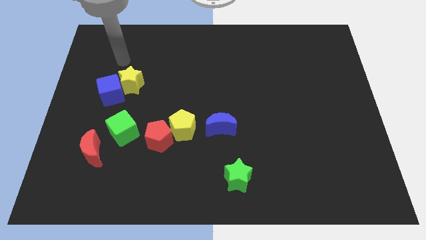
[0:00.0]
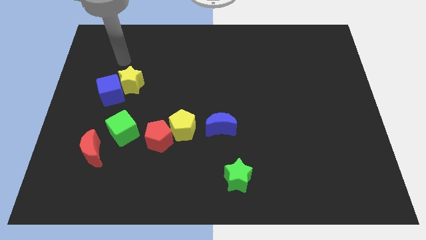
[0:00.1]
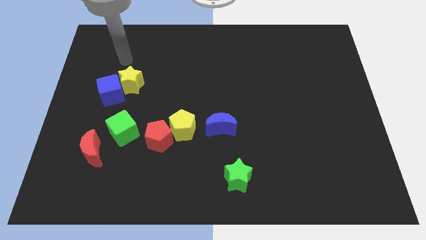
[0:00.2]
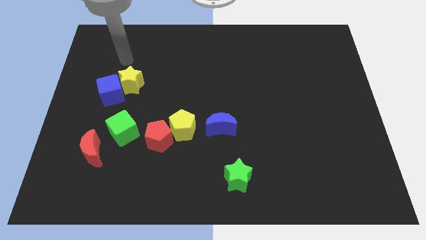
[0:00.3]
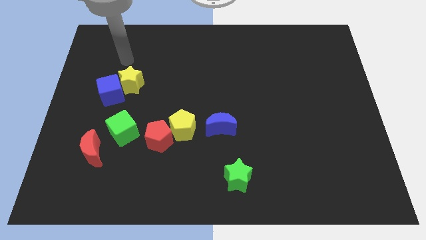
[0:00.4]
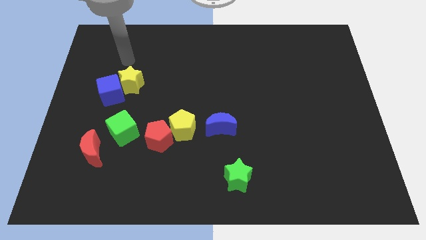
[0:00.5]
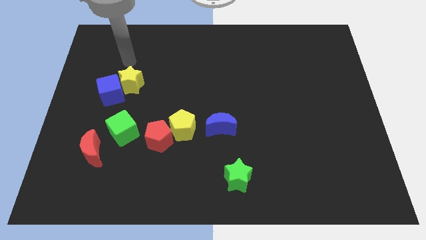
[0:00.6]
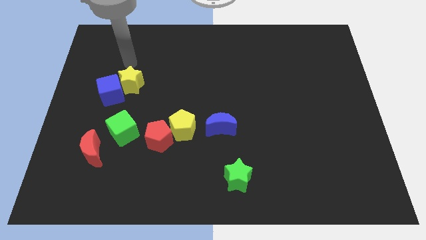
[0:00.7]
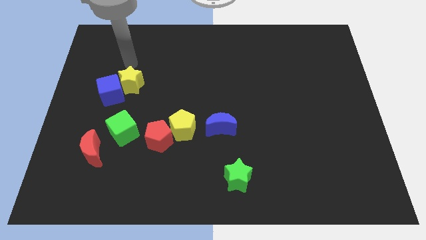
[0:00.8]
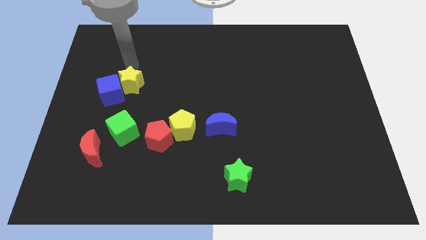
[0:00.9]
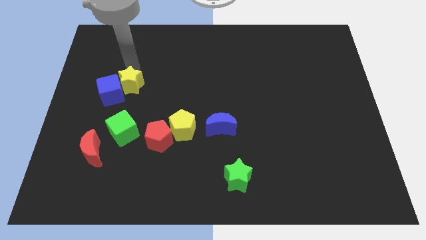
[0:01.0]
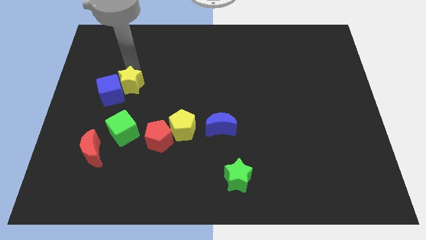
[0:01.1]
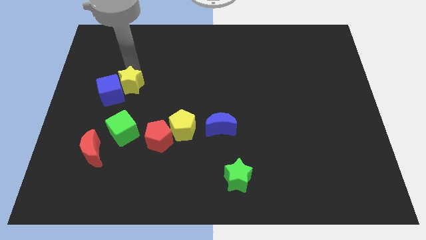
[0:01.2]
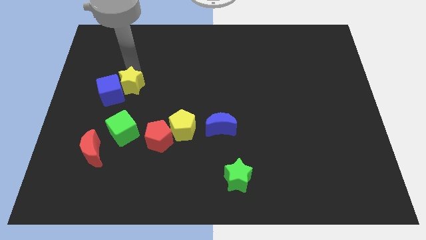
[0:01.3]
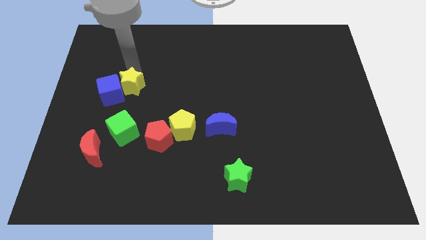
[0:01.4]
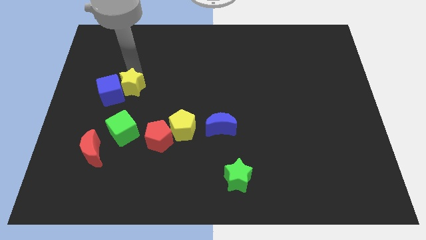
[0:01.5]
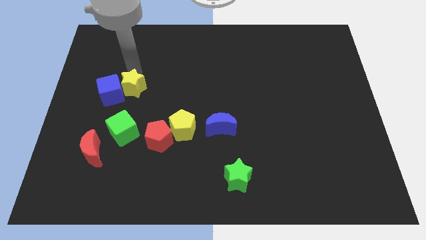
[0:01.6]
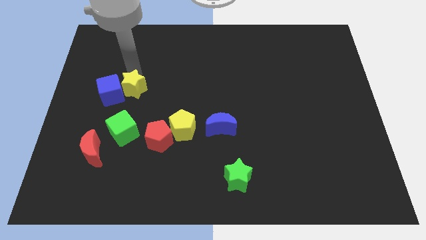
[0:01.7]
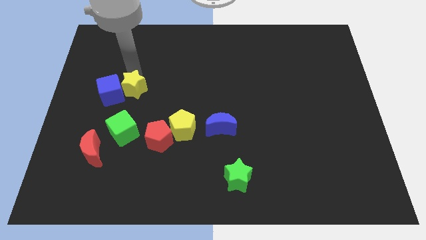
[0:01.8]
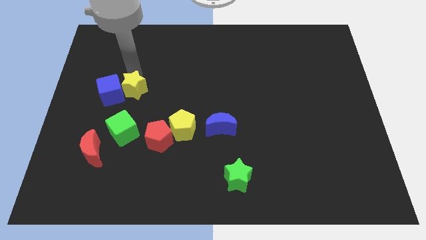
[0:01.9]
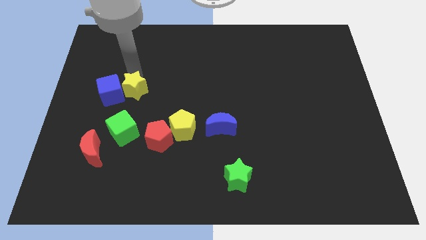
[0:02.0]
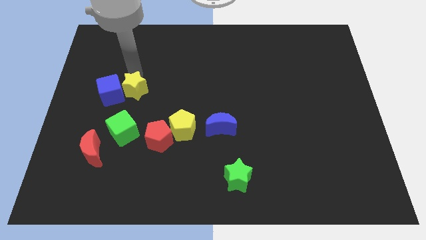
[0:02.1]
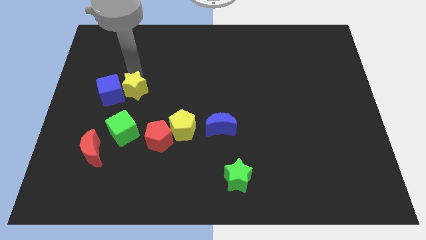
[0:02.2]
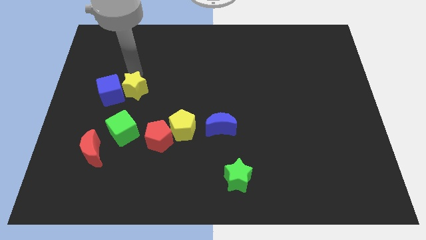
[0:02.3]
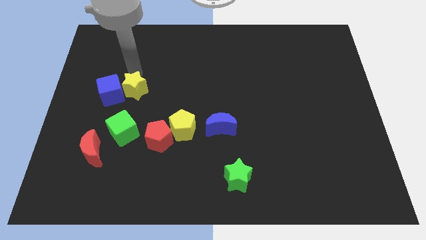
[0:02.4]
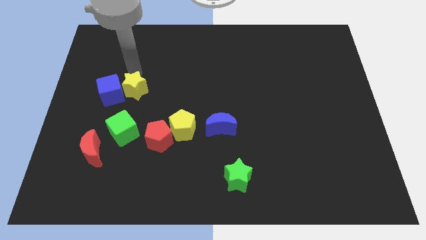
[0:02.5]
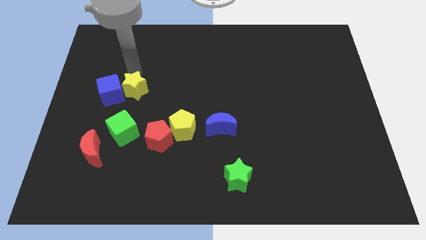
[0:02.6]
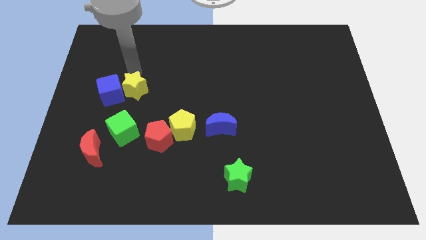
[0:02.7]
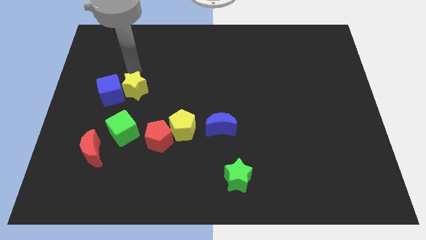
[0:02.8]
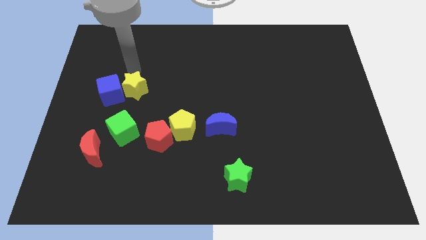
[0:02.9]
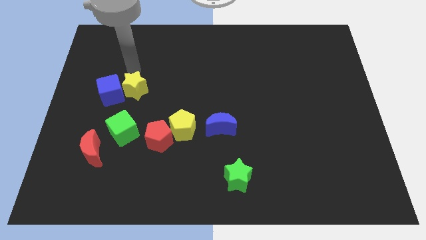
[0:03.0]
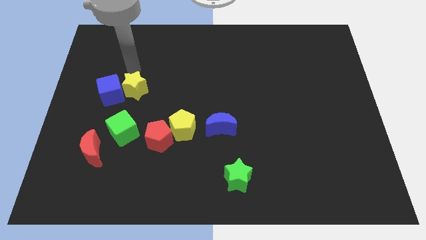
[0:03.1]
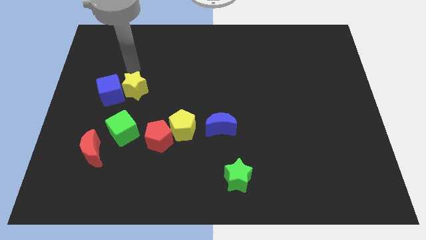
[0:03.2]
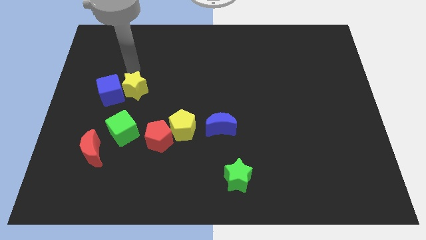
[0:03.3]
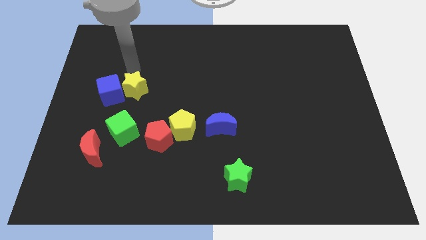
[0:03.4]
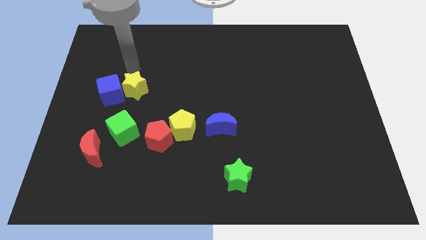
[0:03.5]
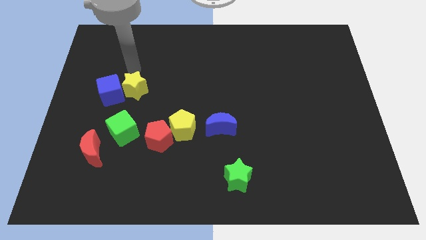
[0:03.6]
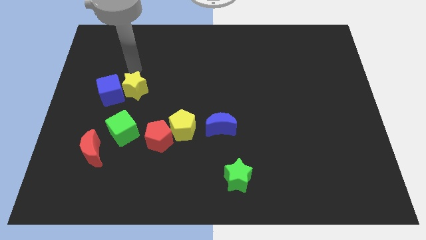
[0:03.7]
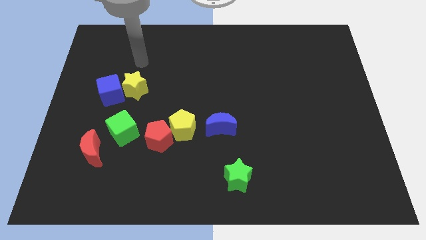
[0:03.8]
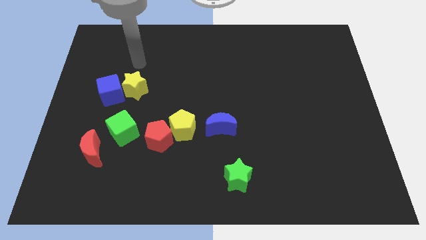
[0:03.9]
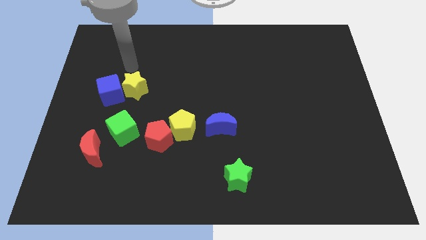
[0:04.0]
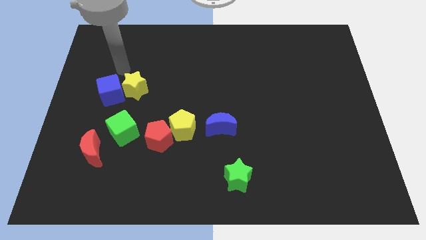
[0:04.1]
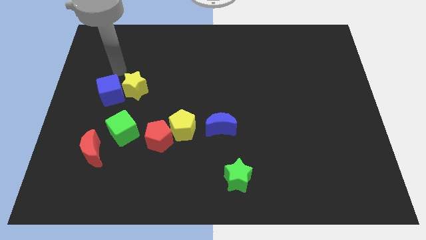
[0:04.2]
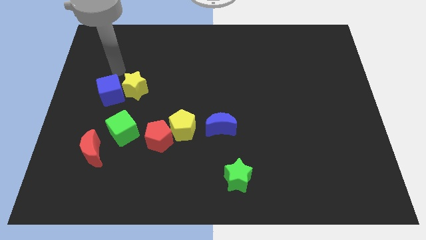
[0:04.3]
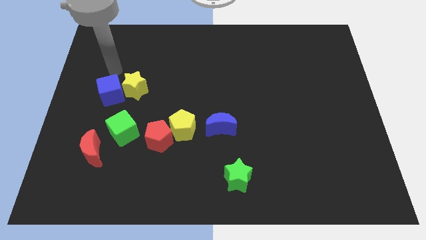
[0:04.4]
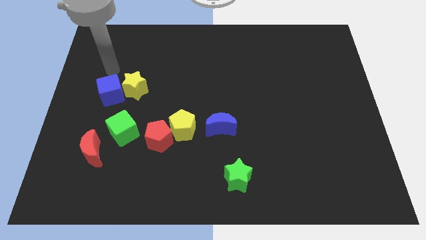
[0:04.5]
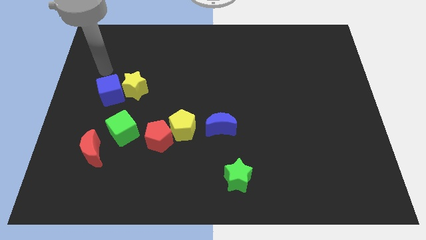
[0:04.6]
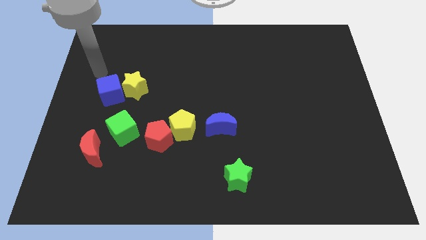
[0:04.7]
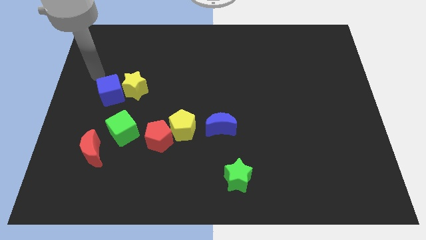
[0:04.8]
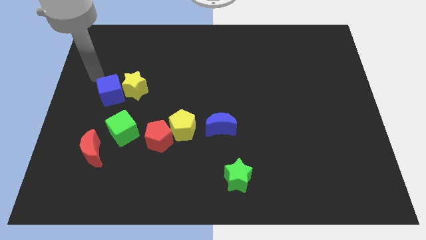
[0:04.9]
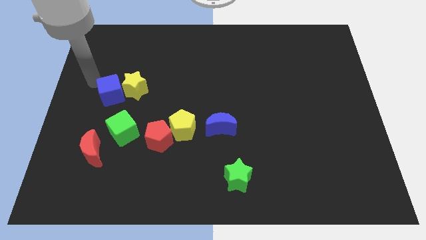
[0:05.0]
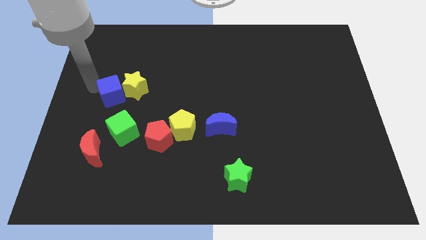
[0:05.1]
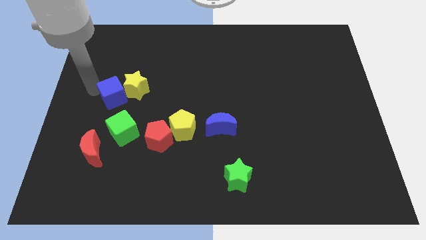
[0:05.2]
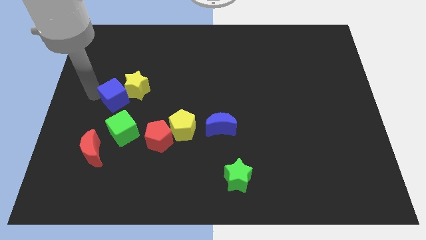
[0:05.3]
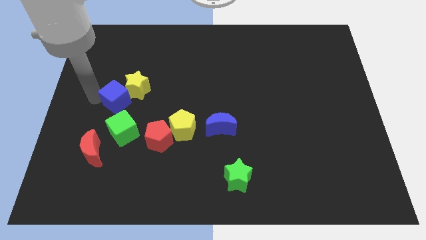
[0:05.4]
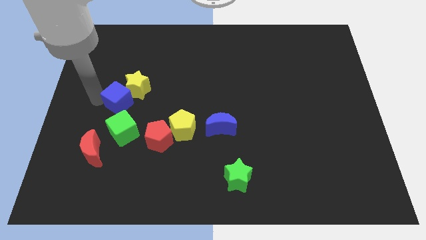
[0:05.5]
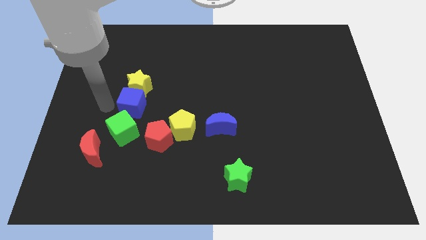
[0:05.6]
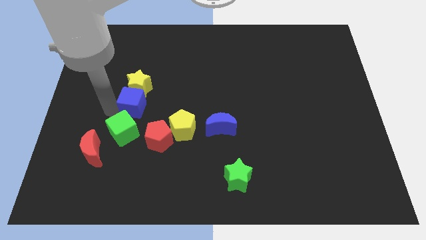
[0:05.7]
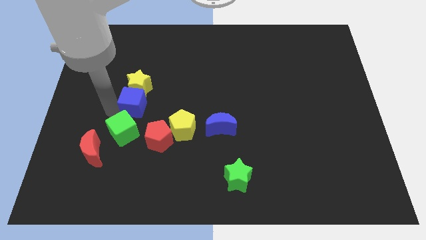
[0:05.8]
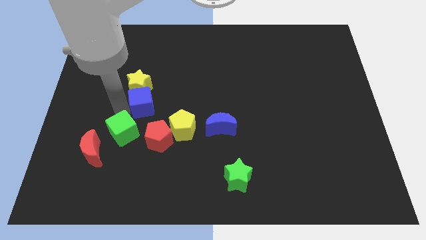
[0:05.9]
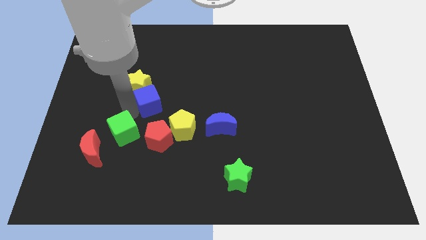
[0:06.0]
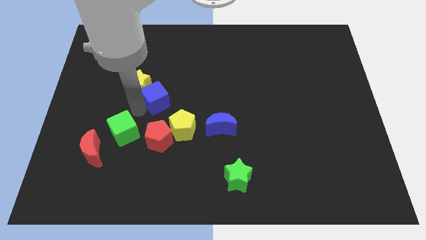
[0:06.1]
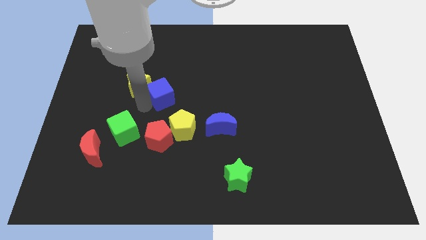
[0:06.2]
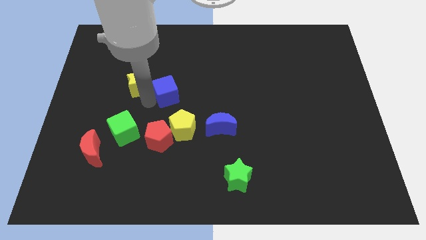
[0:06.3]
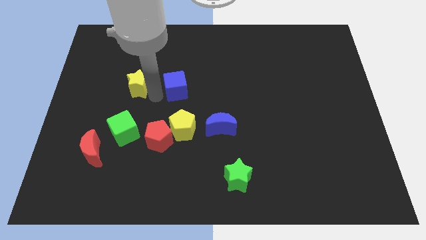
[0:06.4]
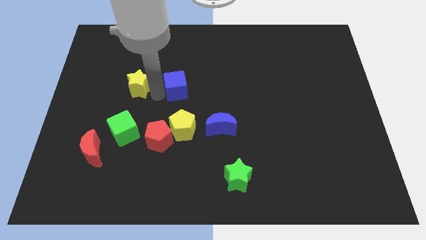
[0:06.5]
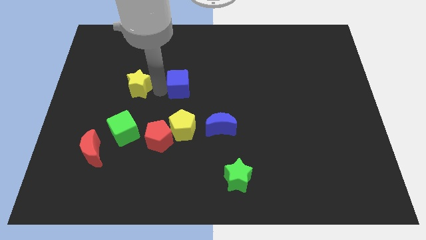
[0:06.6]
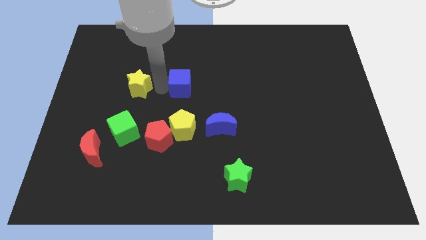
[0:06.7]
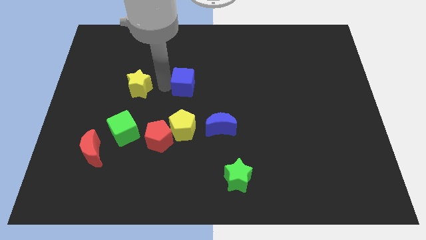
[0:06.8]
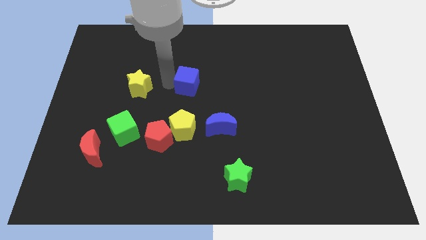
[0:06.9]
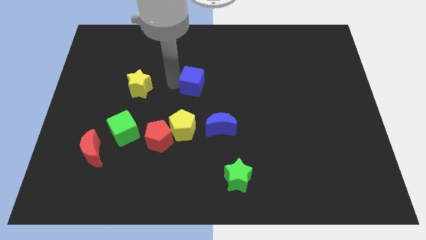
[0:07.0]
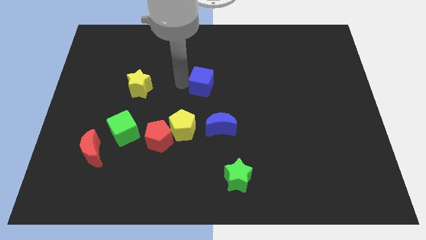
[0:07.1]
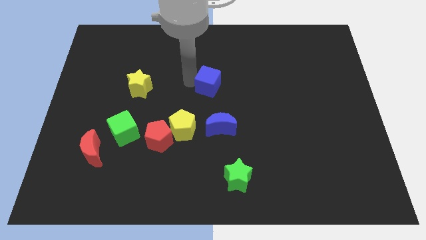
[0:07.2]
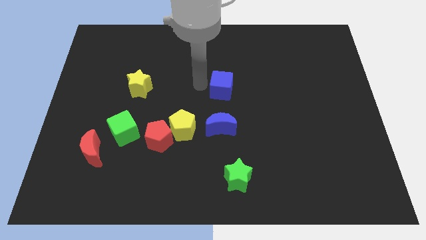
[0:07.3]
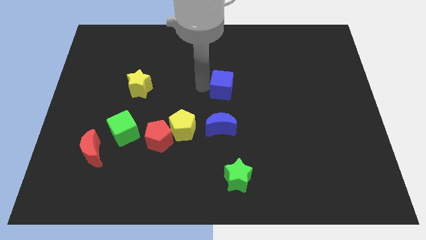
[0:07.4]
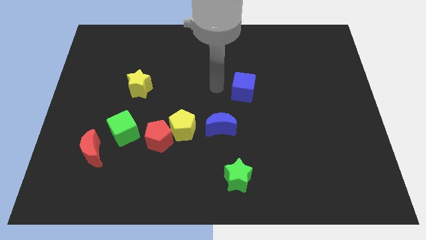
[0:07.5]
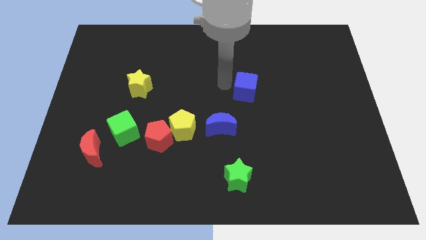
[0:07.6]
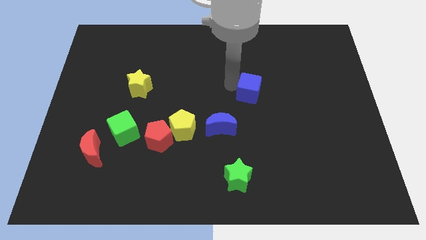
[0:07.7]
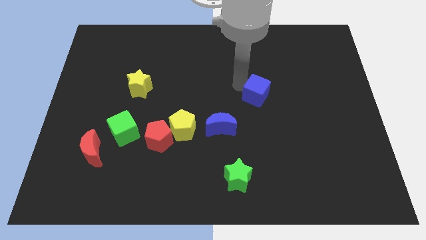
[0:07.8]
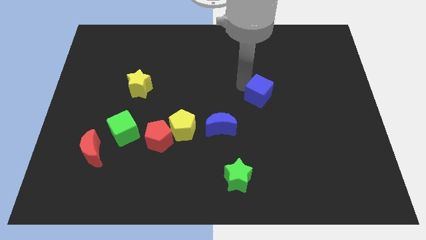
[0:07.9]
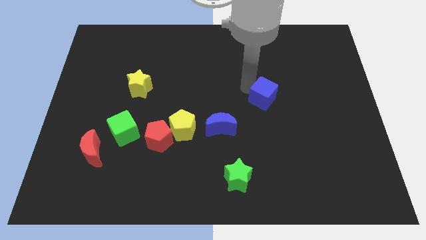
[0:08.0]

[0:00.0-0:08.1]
move the blue cube parallel to the top right of the blue crescent

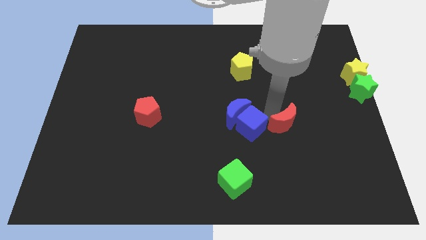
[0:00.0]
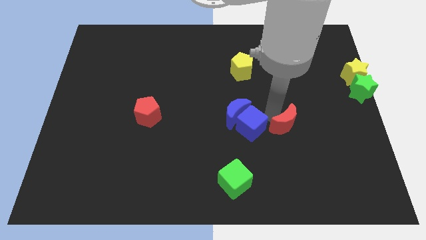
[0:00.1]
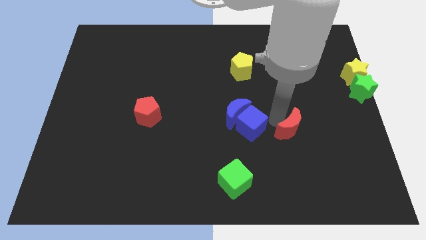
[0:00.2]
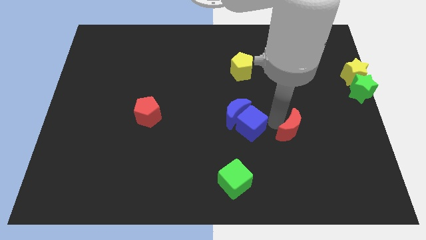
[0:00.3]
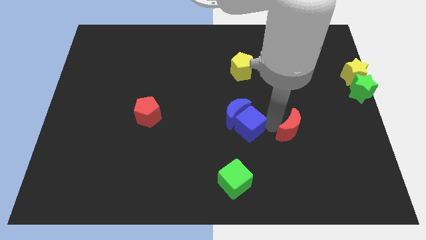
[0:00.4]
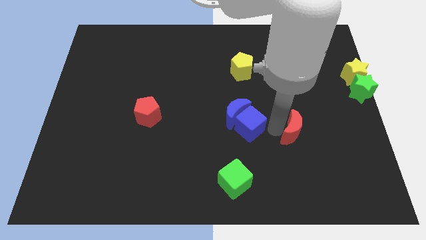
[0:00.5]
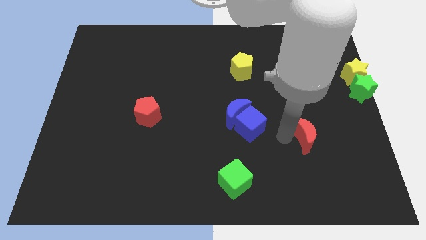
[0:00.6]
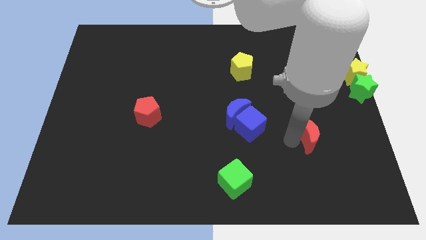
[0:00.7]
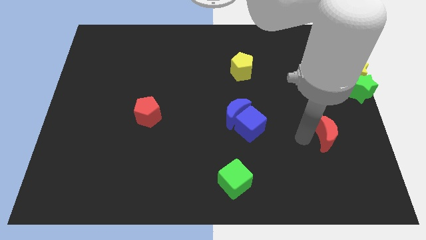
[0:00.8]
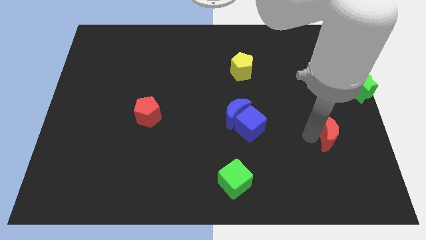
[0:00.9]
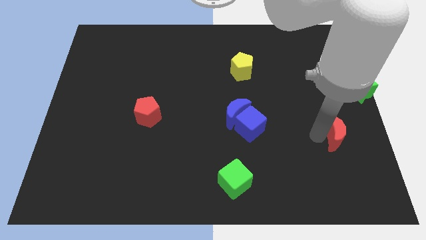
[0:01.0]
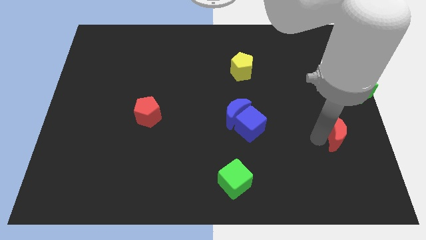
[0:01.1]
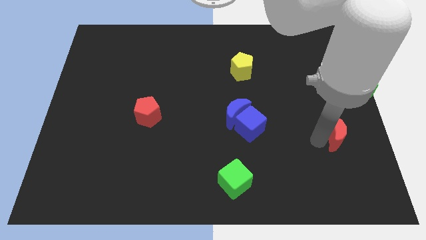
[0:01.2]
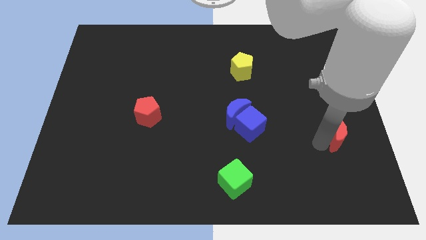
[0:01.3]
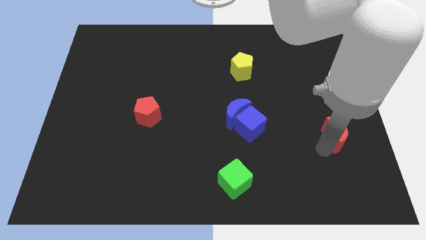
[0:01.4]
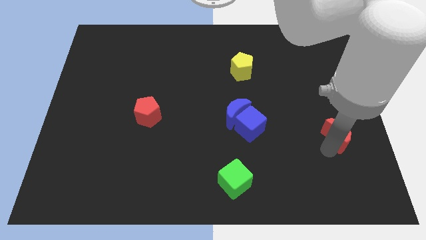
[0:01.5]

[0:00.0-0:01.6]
push the red moon away from the blue cube
